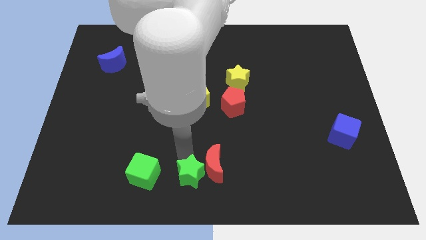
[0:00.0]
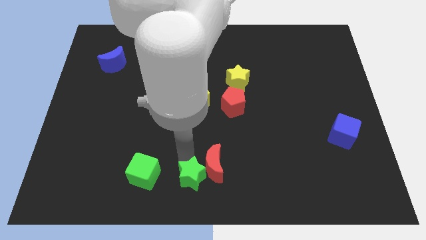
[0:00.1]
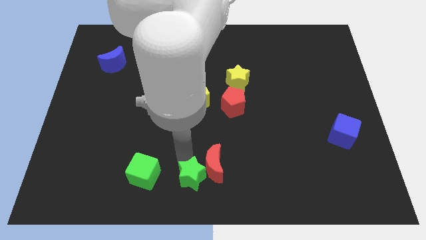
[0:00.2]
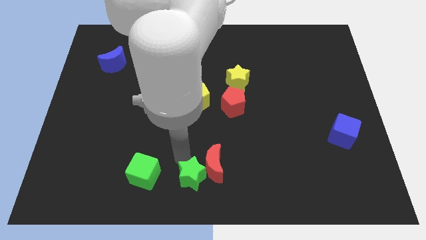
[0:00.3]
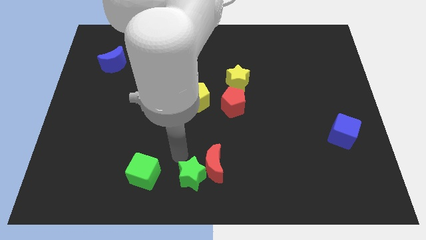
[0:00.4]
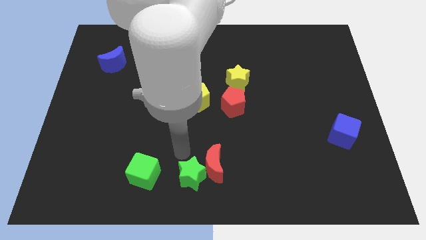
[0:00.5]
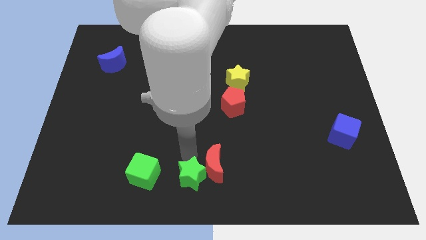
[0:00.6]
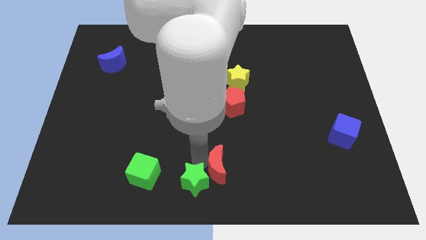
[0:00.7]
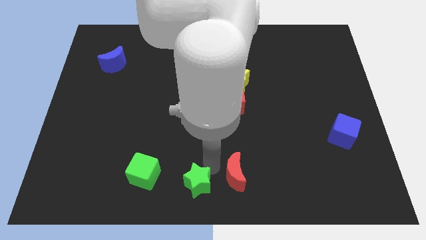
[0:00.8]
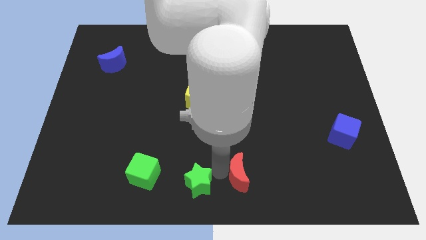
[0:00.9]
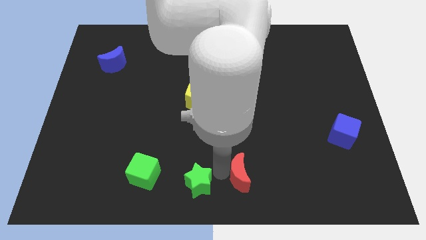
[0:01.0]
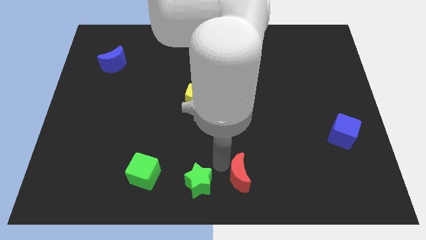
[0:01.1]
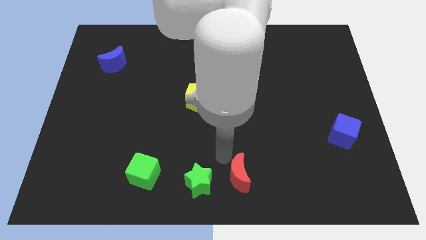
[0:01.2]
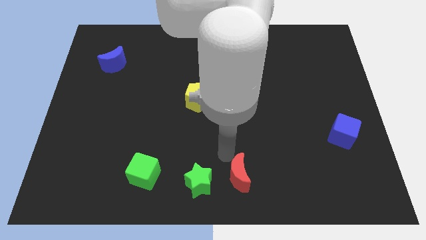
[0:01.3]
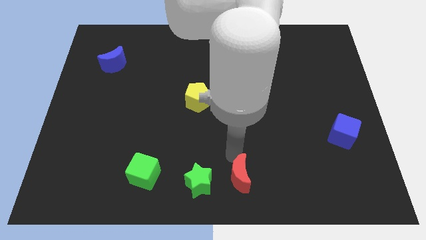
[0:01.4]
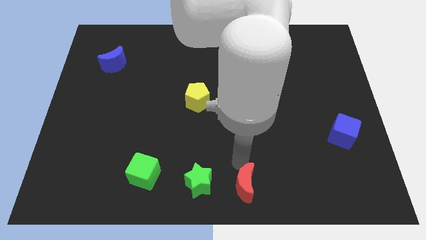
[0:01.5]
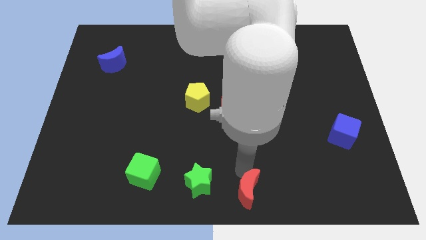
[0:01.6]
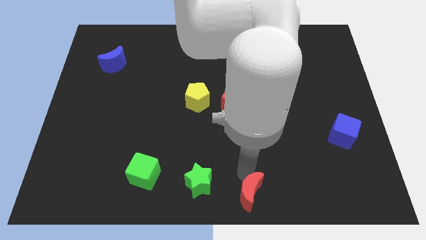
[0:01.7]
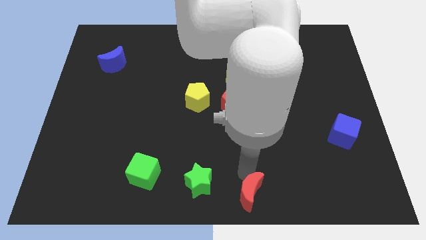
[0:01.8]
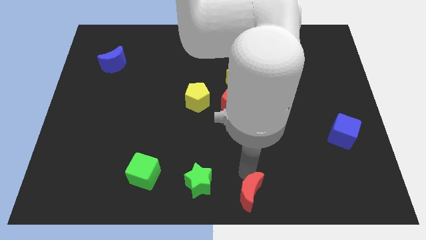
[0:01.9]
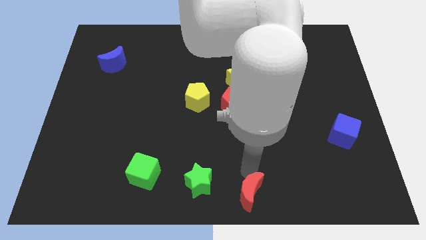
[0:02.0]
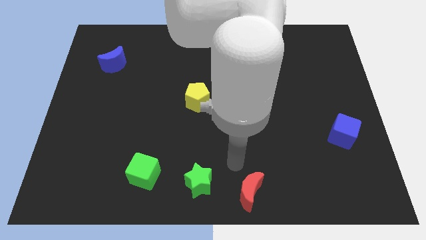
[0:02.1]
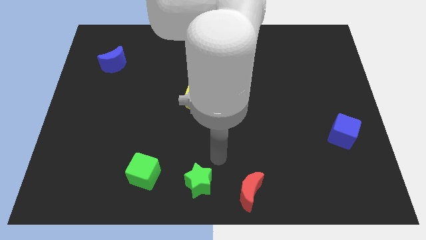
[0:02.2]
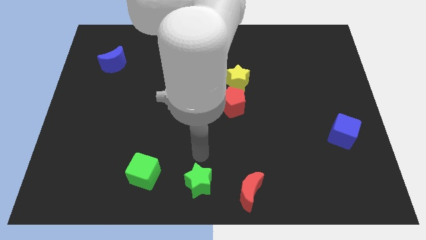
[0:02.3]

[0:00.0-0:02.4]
separate the red moon from the green star

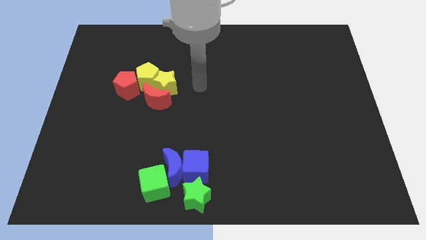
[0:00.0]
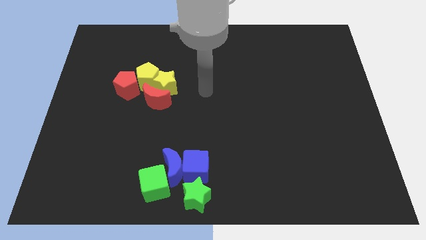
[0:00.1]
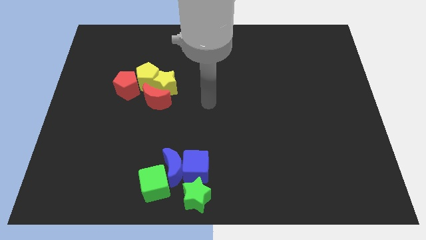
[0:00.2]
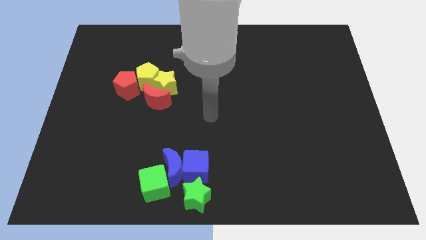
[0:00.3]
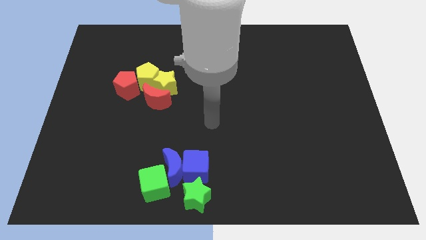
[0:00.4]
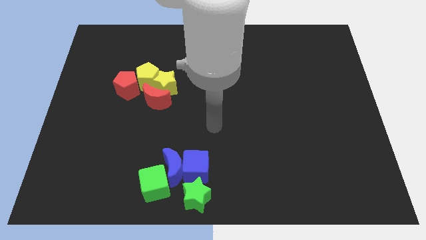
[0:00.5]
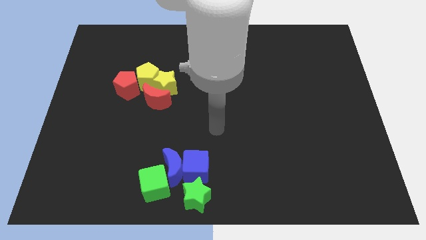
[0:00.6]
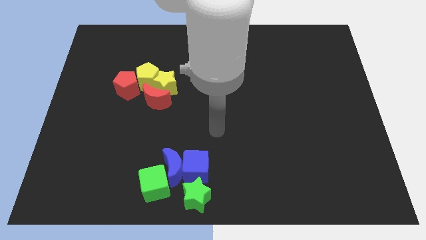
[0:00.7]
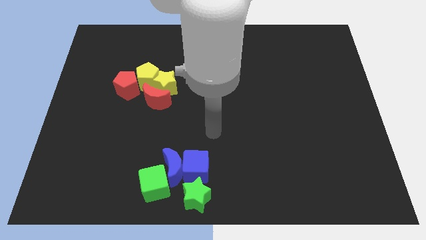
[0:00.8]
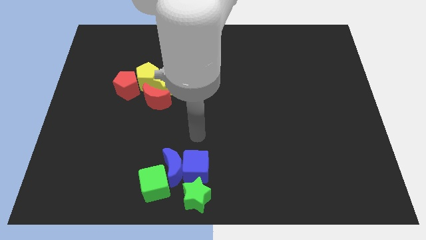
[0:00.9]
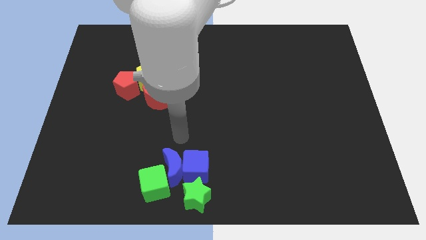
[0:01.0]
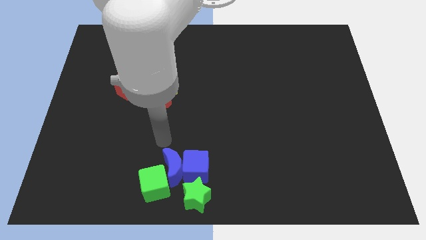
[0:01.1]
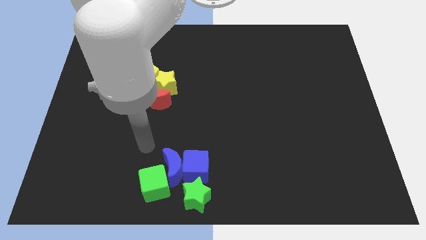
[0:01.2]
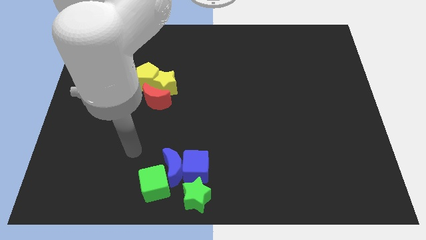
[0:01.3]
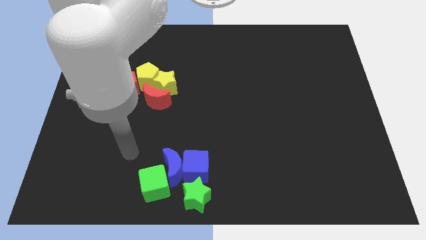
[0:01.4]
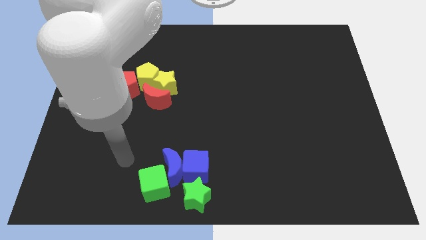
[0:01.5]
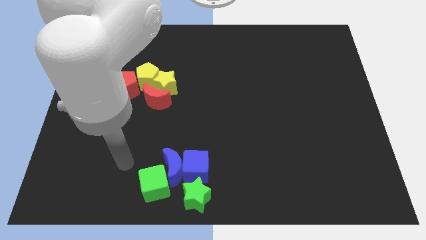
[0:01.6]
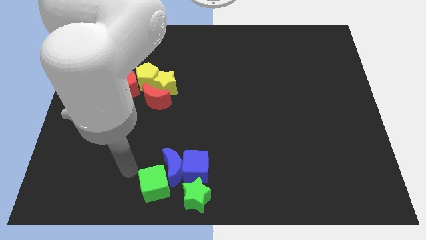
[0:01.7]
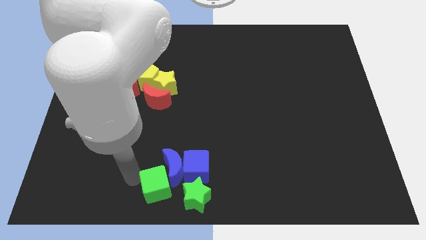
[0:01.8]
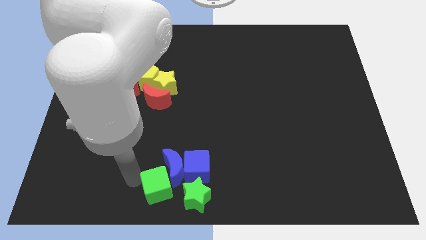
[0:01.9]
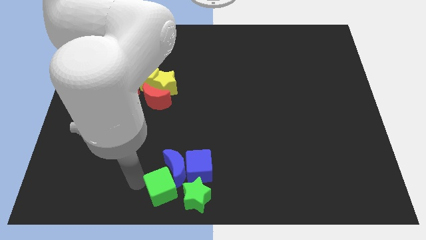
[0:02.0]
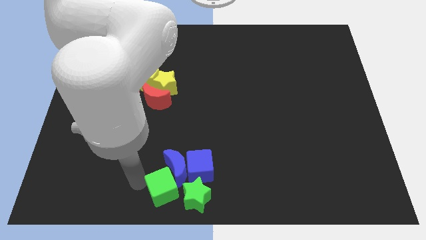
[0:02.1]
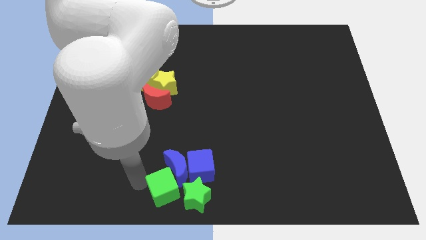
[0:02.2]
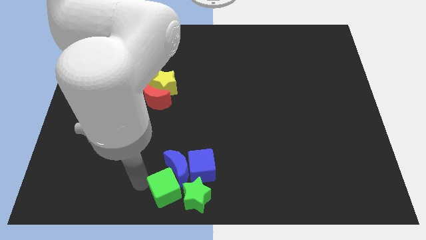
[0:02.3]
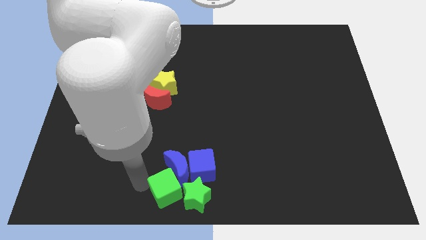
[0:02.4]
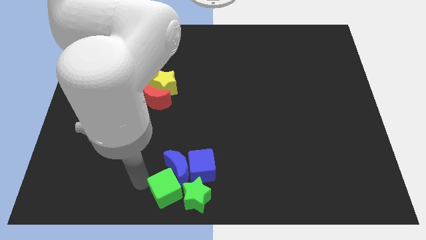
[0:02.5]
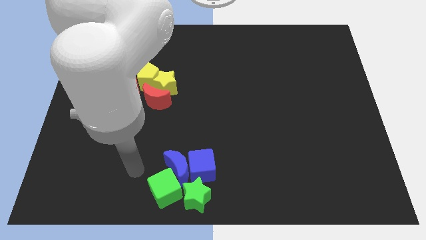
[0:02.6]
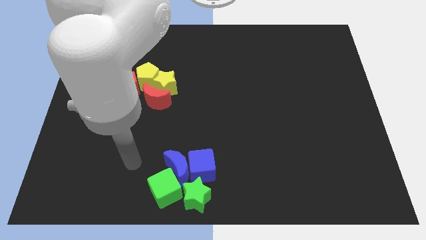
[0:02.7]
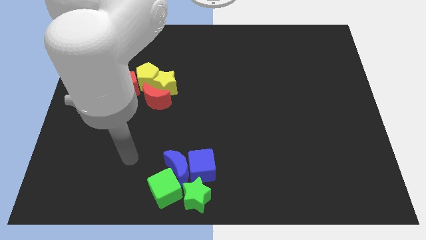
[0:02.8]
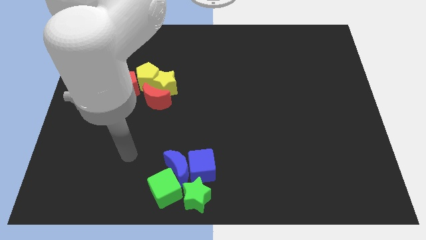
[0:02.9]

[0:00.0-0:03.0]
push the green cube to the left side of the green star

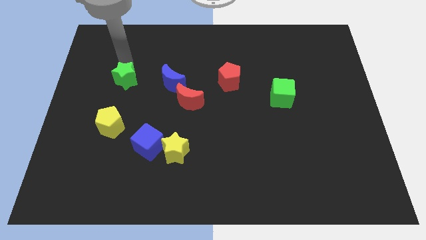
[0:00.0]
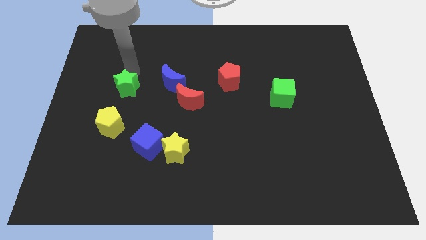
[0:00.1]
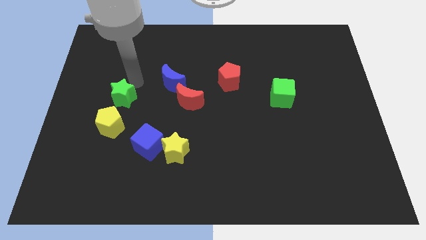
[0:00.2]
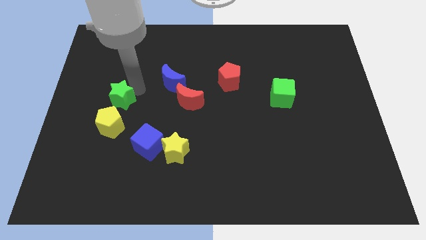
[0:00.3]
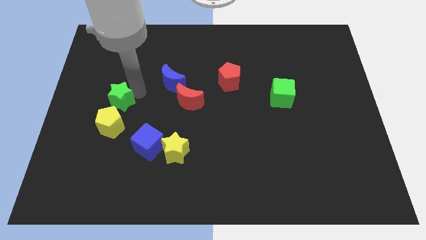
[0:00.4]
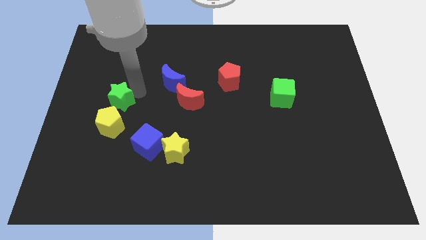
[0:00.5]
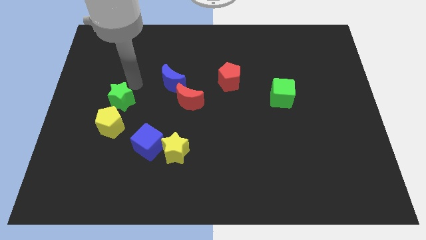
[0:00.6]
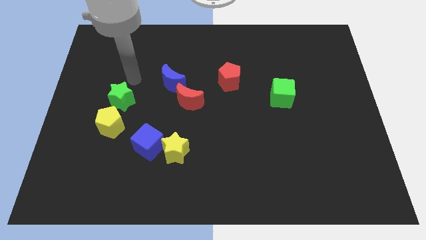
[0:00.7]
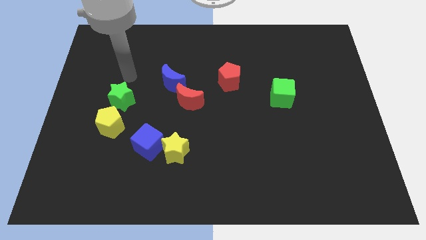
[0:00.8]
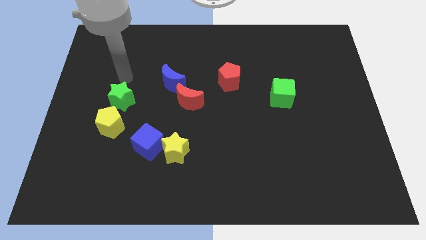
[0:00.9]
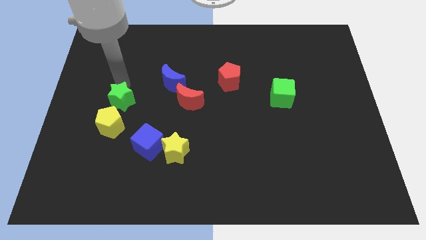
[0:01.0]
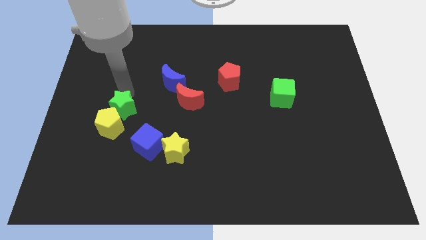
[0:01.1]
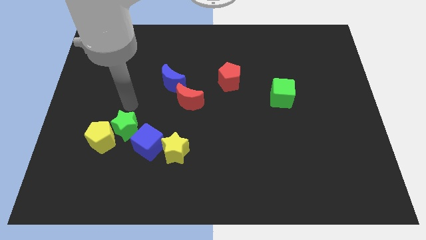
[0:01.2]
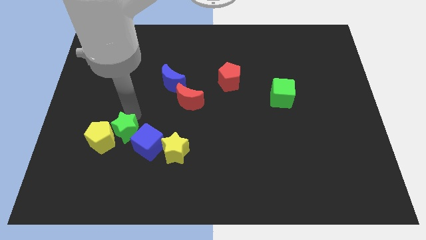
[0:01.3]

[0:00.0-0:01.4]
push the green star into the top right side of the yellow pentagon

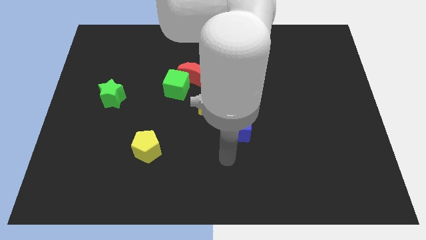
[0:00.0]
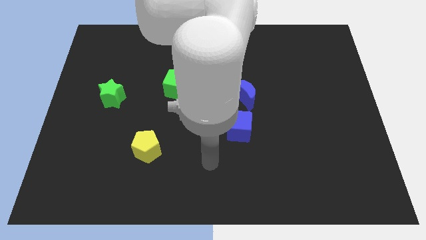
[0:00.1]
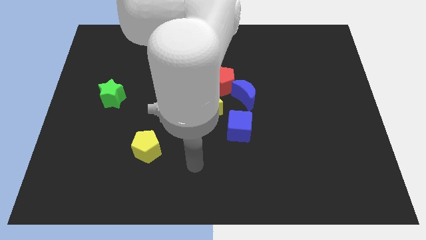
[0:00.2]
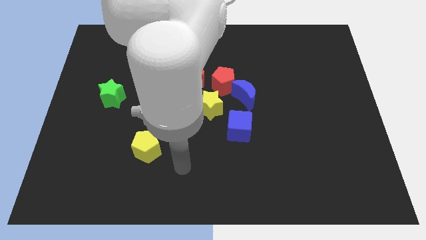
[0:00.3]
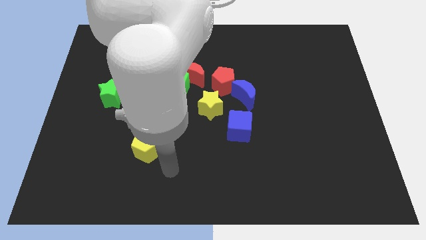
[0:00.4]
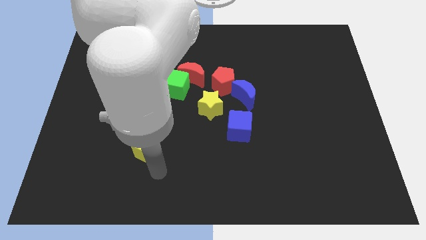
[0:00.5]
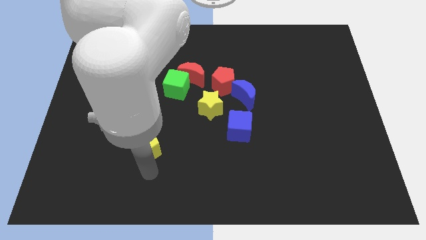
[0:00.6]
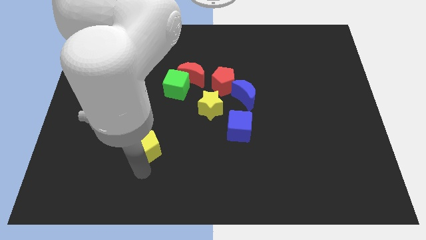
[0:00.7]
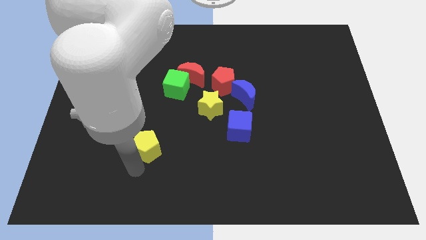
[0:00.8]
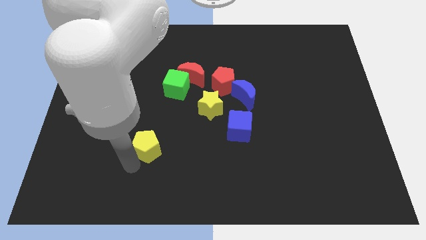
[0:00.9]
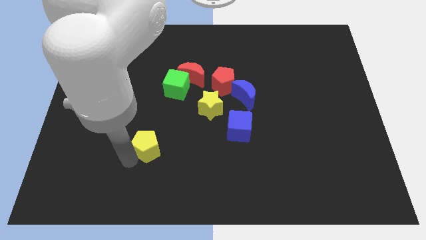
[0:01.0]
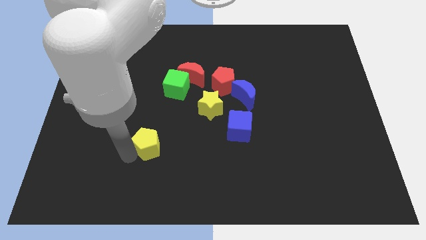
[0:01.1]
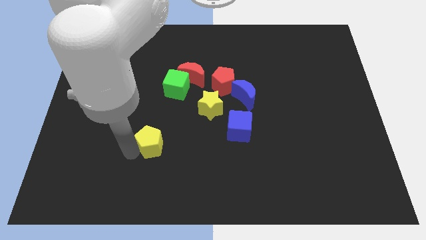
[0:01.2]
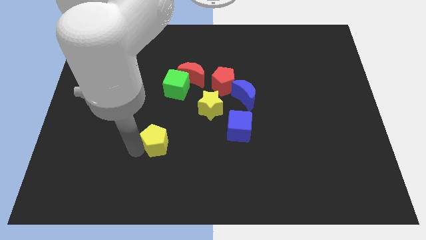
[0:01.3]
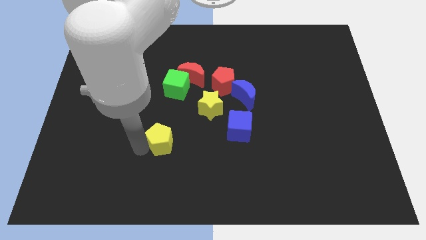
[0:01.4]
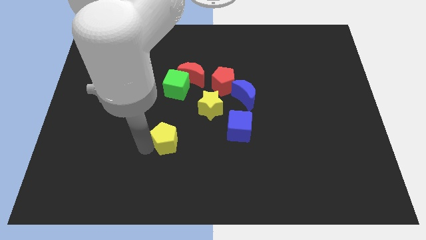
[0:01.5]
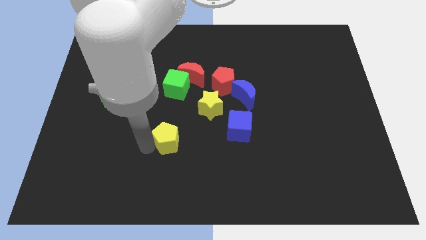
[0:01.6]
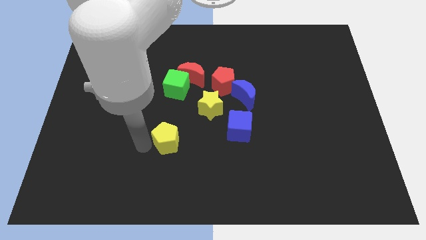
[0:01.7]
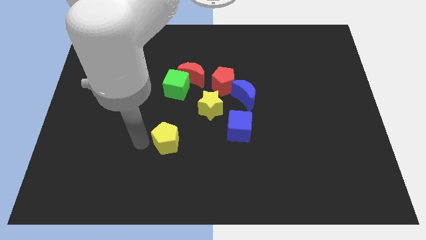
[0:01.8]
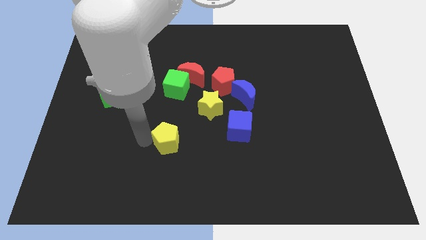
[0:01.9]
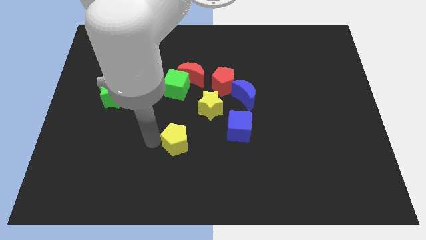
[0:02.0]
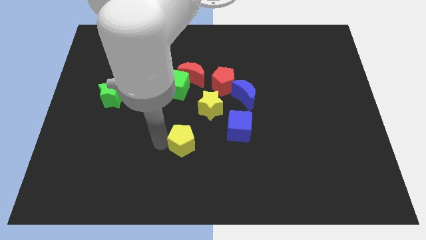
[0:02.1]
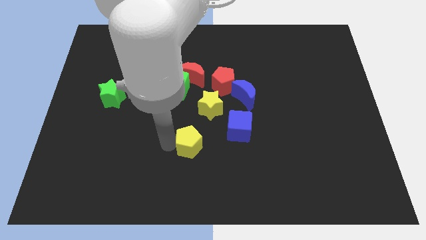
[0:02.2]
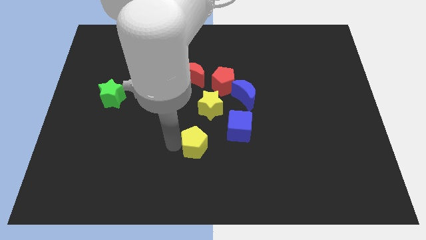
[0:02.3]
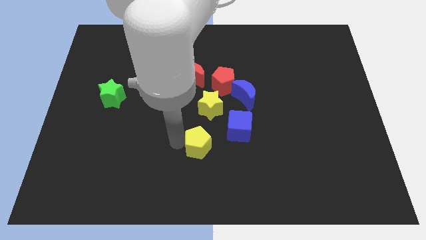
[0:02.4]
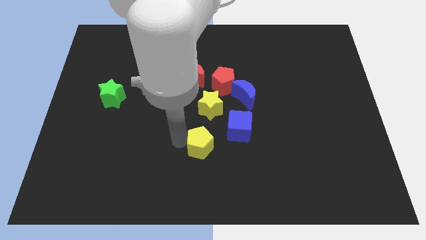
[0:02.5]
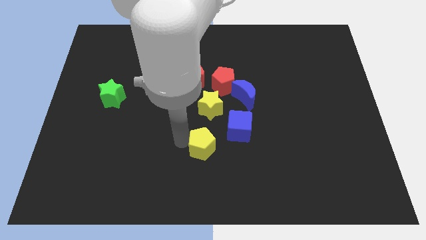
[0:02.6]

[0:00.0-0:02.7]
push the yellow pentagon towards the blue cube
